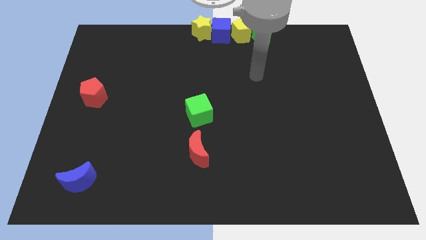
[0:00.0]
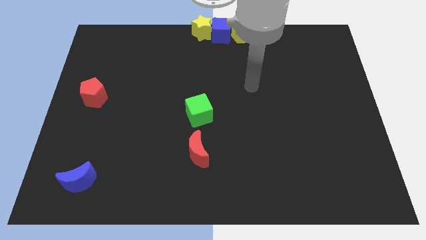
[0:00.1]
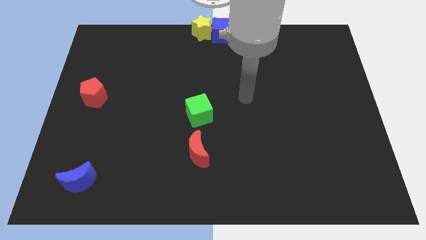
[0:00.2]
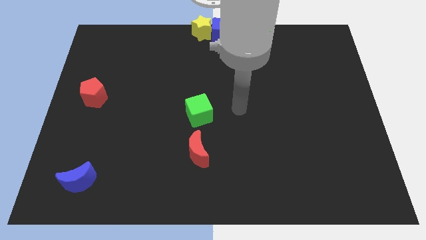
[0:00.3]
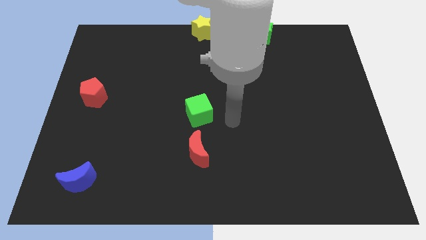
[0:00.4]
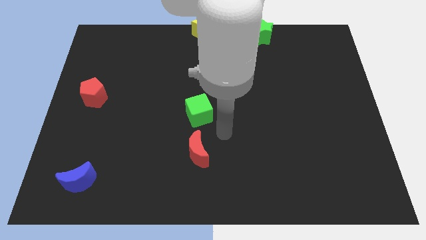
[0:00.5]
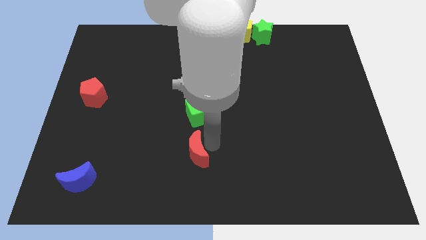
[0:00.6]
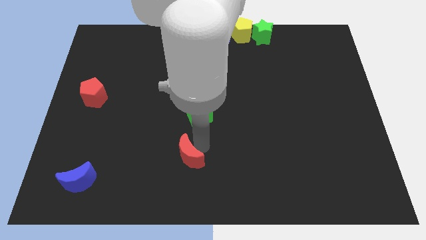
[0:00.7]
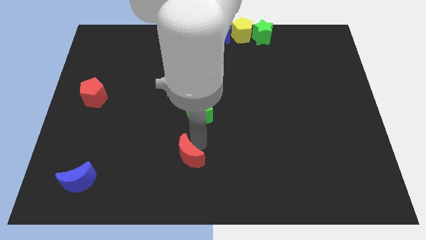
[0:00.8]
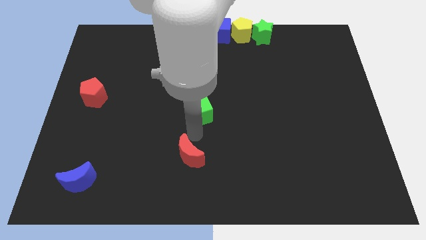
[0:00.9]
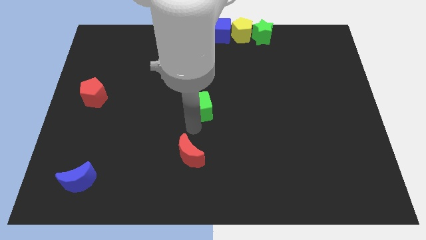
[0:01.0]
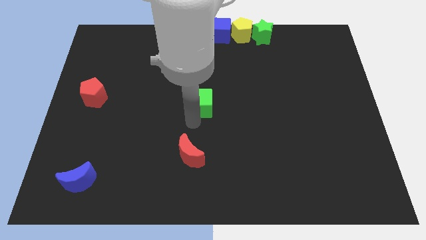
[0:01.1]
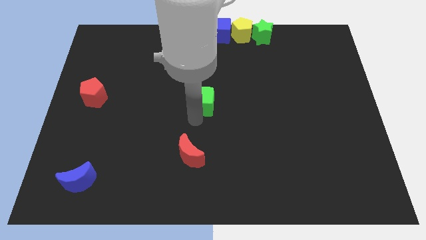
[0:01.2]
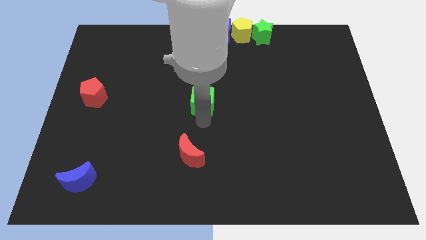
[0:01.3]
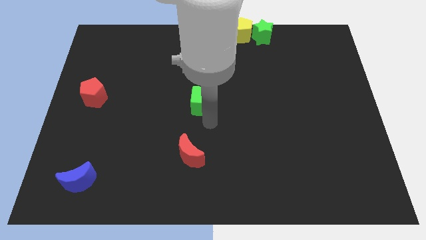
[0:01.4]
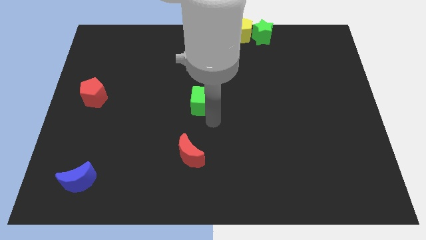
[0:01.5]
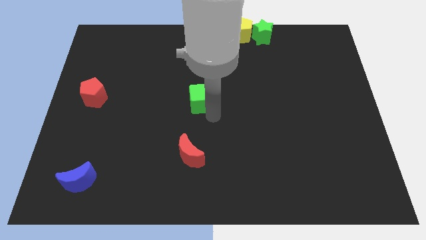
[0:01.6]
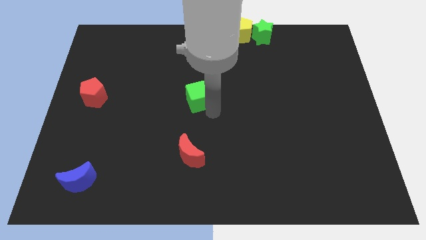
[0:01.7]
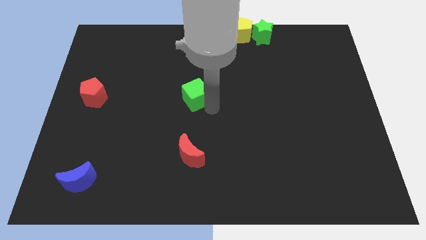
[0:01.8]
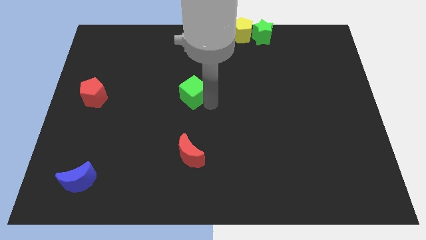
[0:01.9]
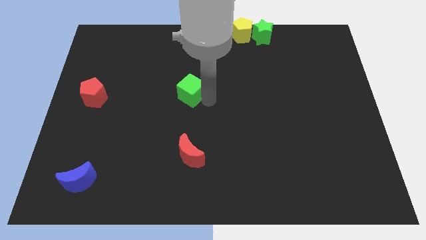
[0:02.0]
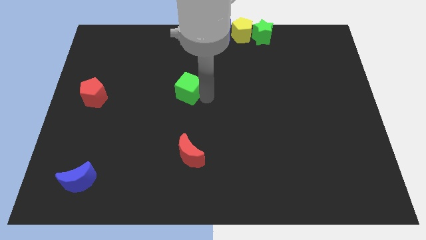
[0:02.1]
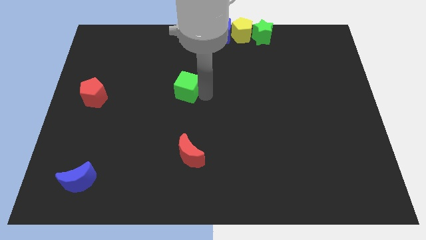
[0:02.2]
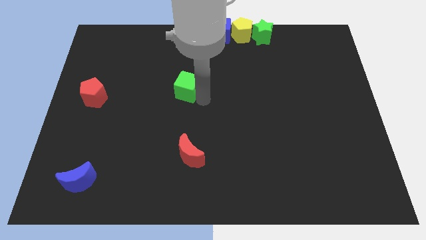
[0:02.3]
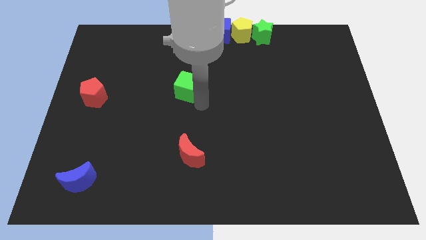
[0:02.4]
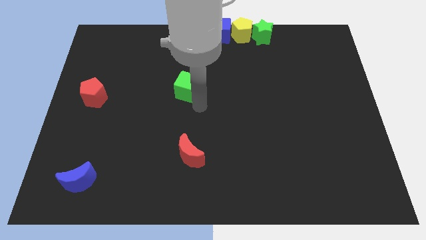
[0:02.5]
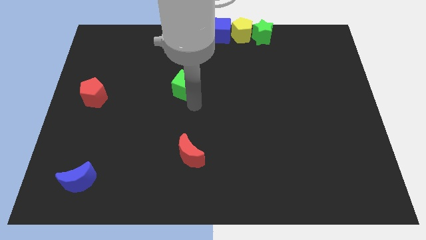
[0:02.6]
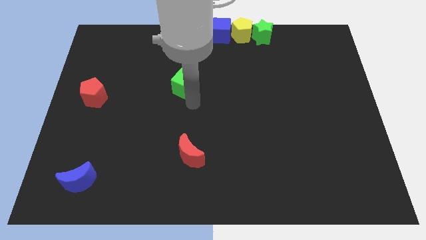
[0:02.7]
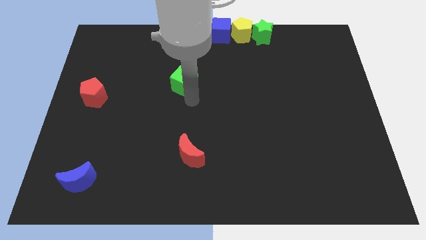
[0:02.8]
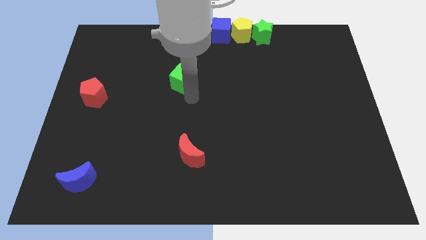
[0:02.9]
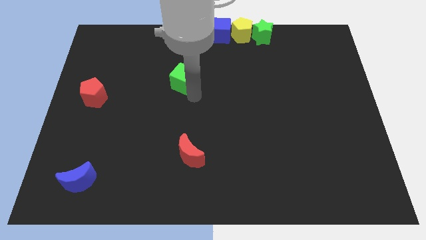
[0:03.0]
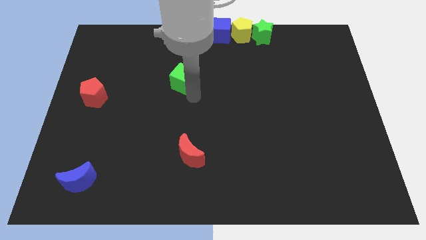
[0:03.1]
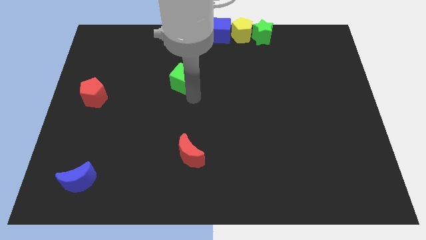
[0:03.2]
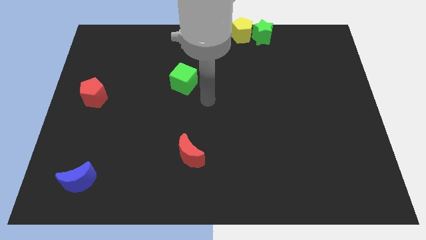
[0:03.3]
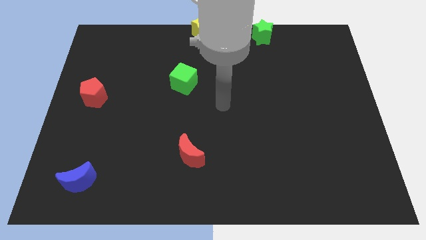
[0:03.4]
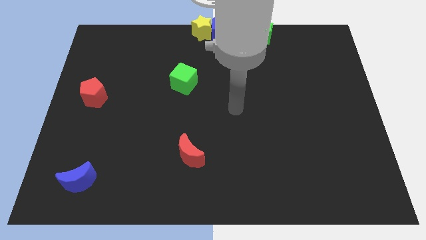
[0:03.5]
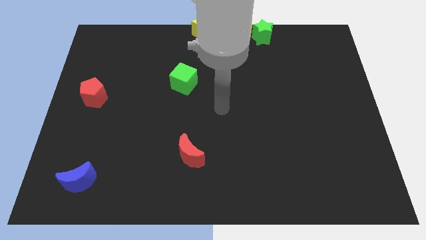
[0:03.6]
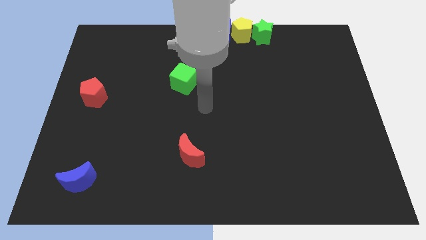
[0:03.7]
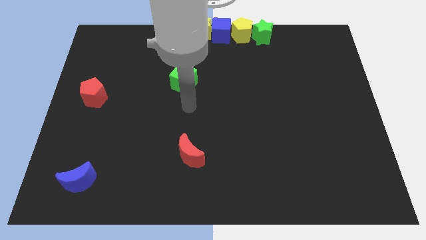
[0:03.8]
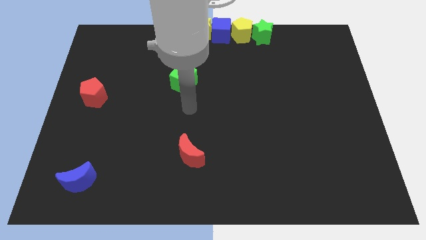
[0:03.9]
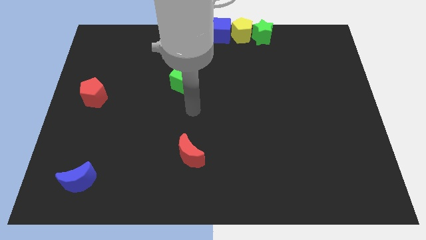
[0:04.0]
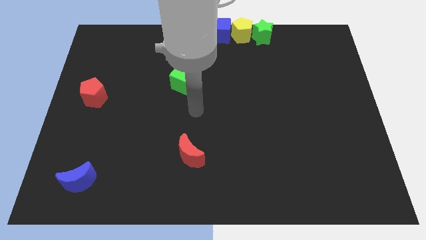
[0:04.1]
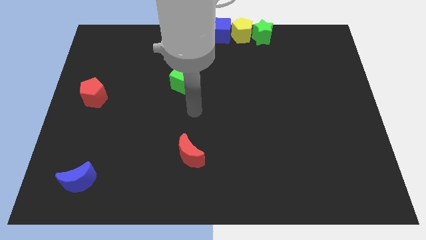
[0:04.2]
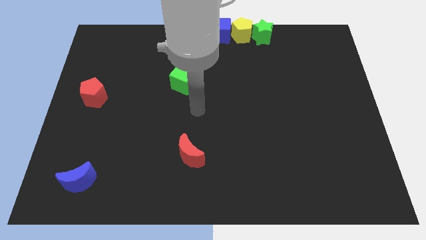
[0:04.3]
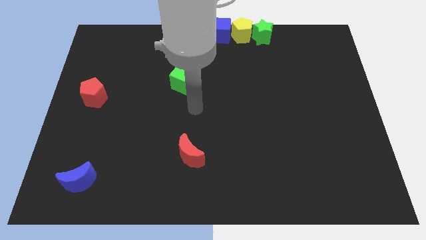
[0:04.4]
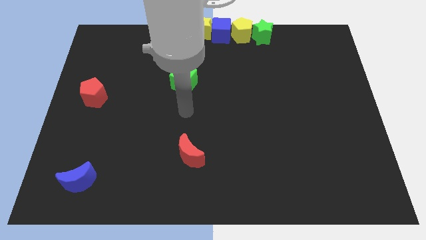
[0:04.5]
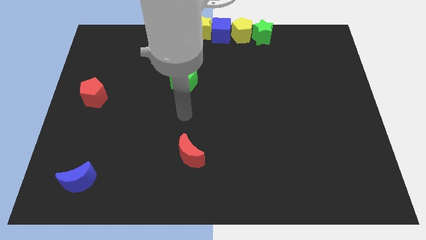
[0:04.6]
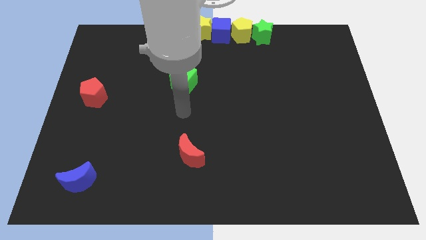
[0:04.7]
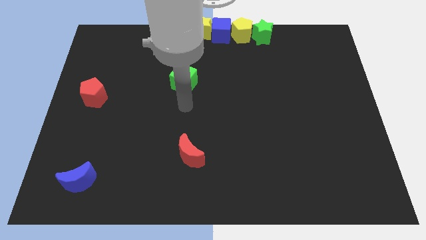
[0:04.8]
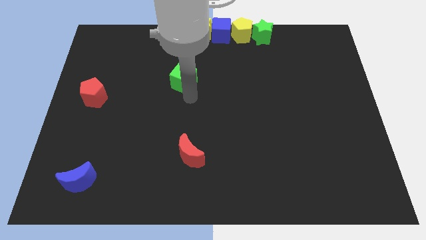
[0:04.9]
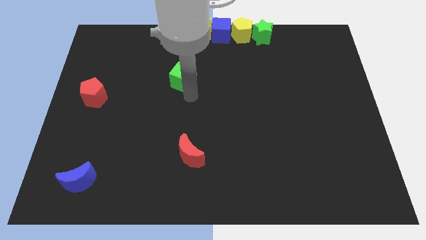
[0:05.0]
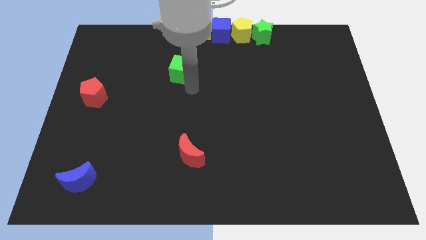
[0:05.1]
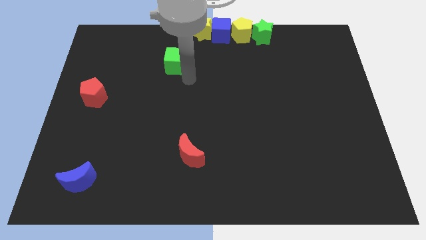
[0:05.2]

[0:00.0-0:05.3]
move the green cube to the top of the board

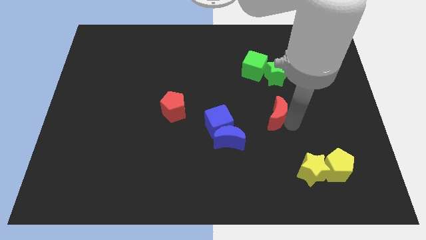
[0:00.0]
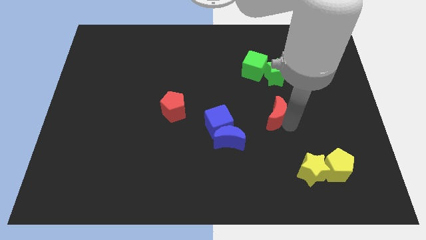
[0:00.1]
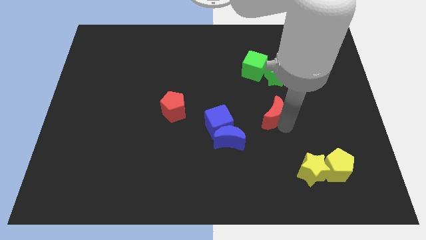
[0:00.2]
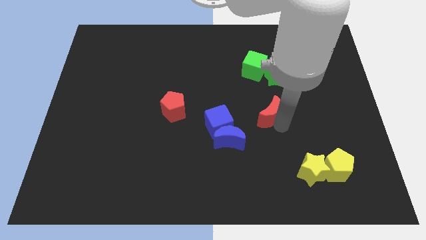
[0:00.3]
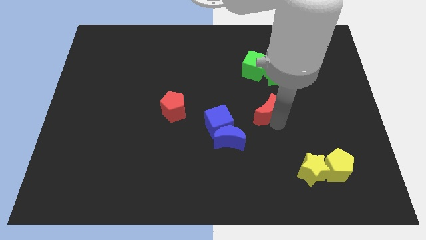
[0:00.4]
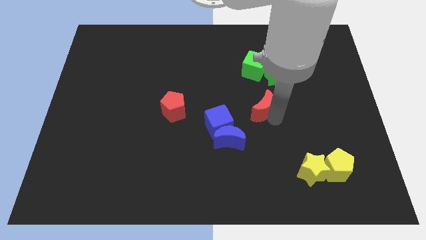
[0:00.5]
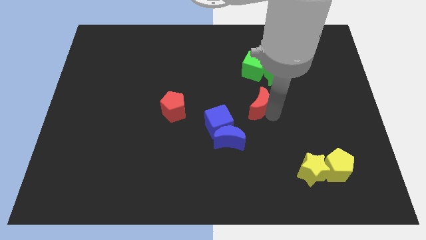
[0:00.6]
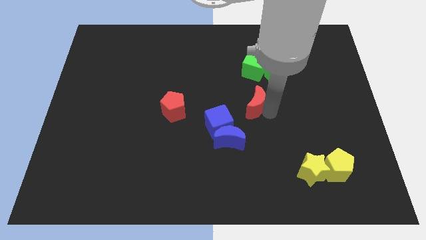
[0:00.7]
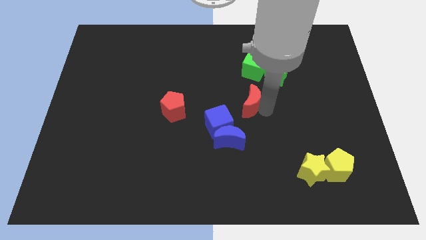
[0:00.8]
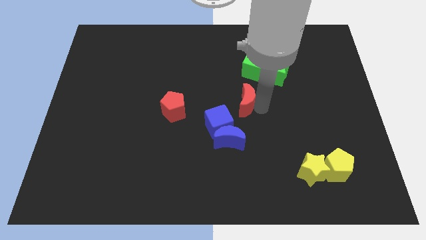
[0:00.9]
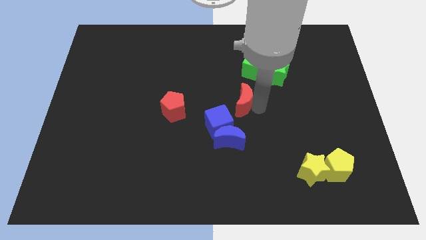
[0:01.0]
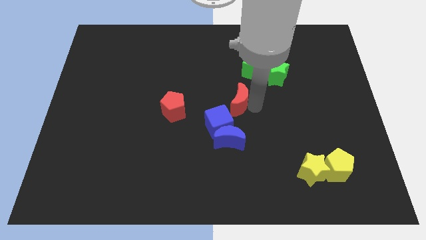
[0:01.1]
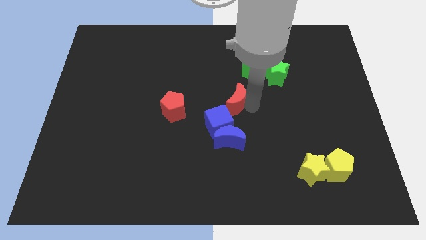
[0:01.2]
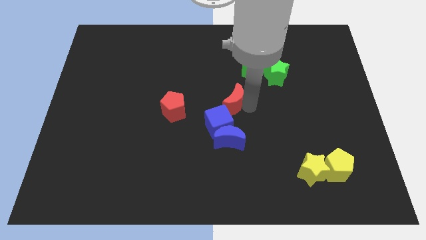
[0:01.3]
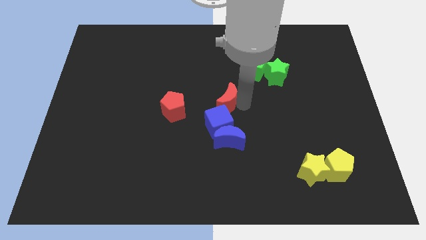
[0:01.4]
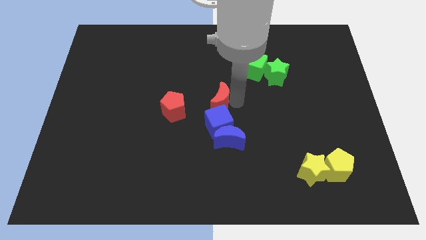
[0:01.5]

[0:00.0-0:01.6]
move the red moon to the top of the blue cube

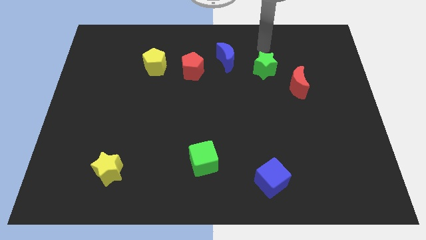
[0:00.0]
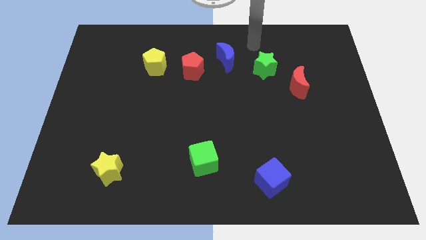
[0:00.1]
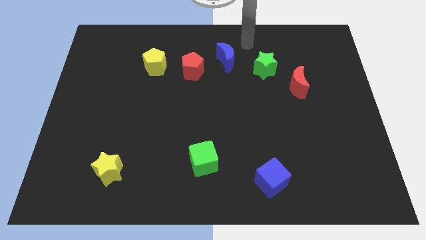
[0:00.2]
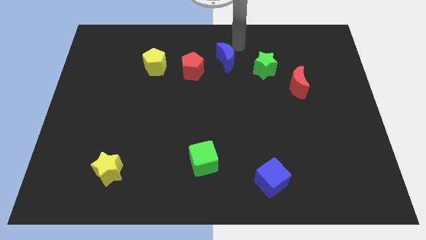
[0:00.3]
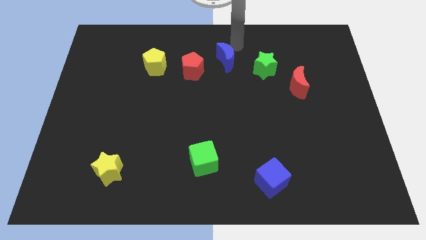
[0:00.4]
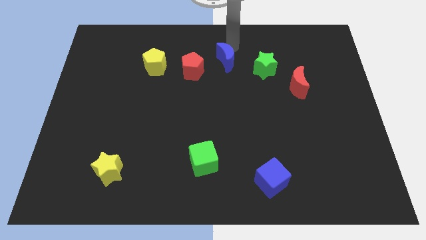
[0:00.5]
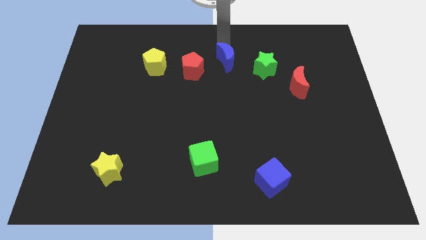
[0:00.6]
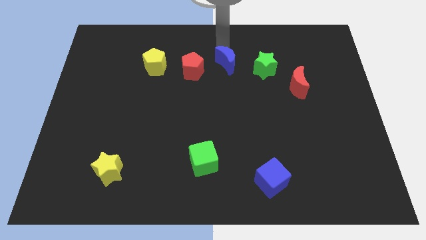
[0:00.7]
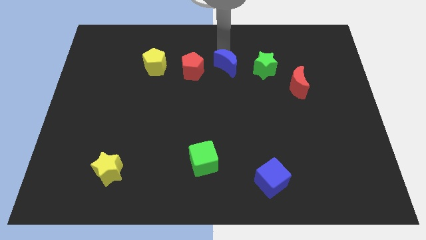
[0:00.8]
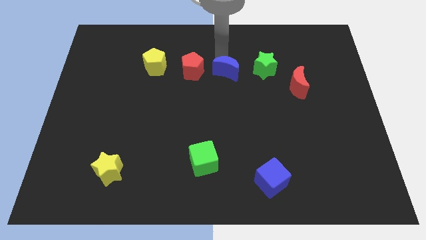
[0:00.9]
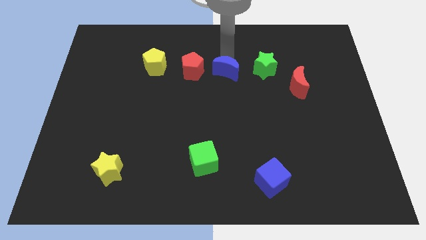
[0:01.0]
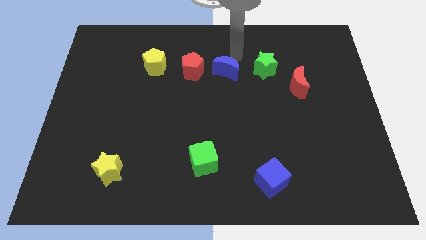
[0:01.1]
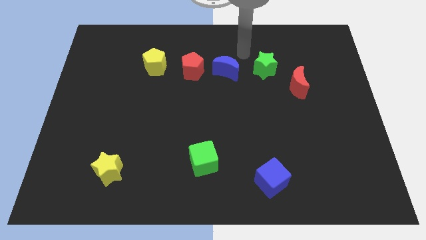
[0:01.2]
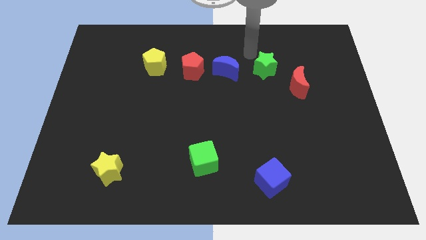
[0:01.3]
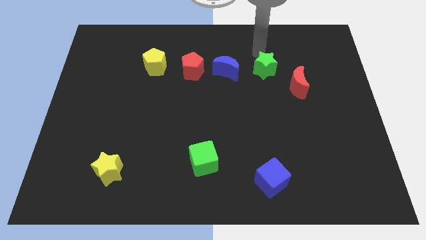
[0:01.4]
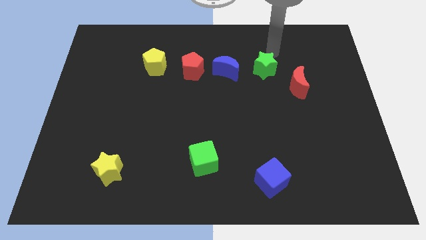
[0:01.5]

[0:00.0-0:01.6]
place the blue crescent in between the green star and the red pentagon

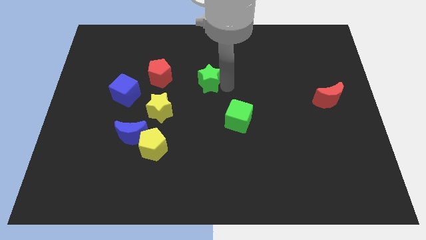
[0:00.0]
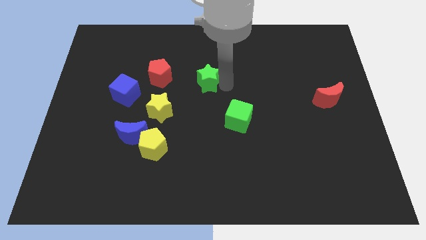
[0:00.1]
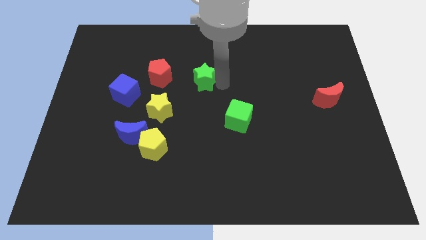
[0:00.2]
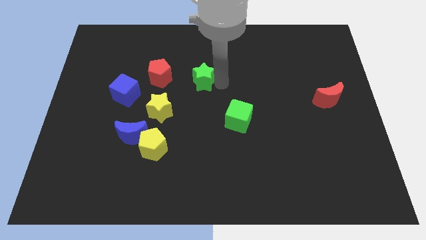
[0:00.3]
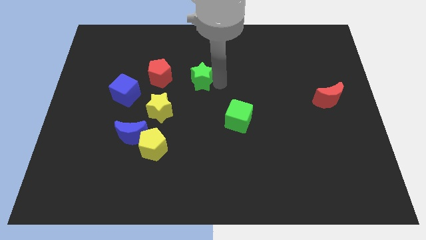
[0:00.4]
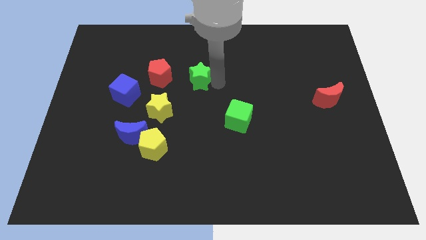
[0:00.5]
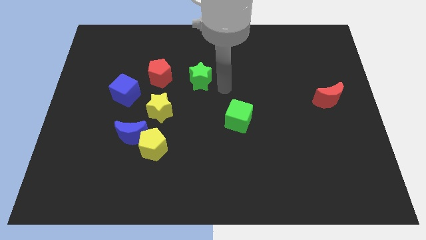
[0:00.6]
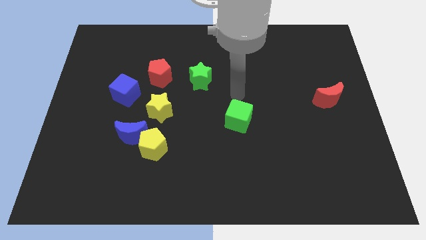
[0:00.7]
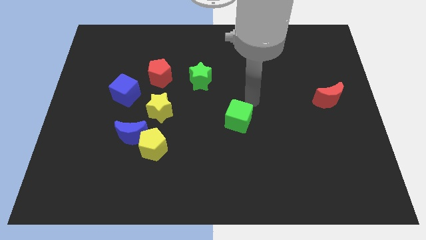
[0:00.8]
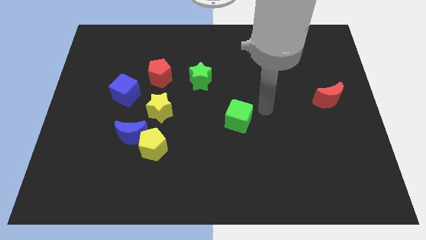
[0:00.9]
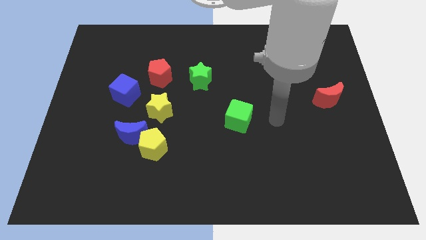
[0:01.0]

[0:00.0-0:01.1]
drag the green star diagonally top right to yellow star
